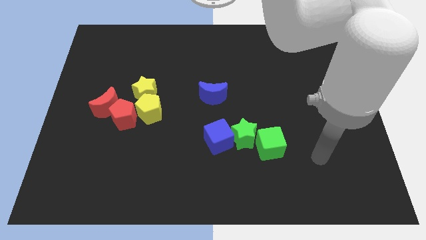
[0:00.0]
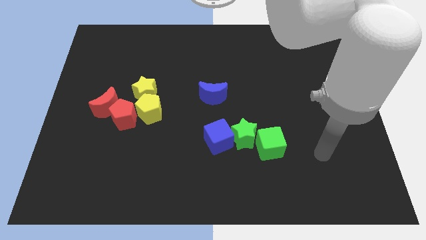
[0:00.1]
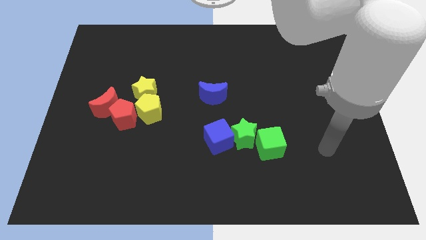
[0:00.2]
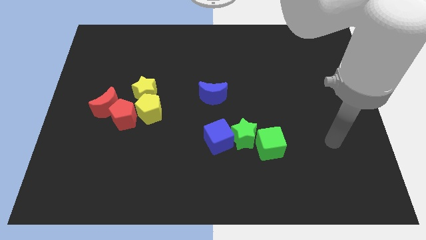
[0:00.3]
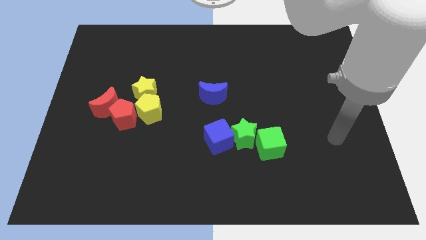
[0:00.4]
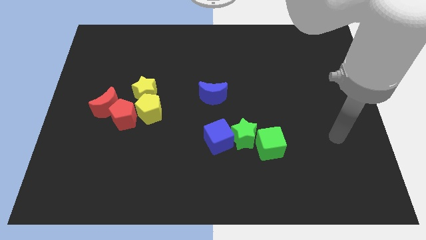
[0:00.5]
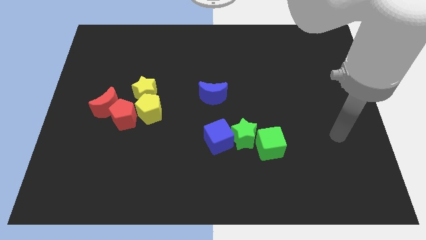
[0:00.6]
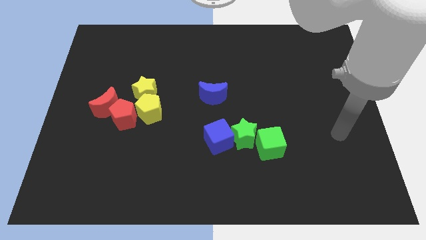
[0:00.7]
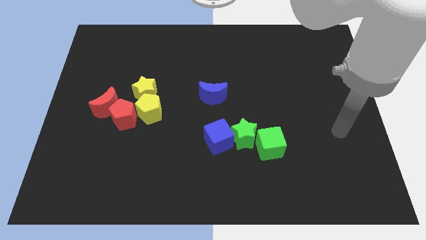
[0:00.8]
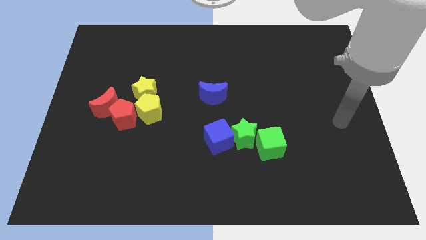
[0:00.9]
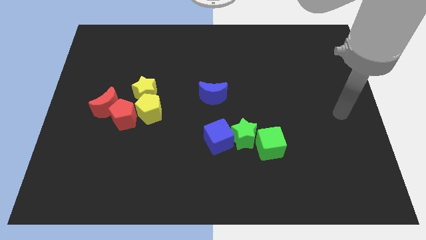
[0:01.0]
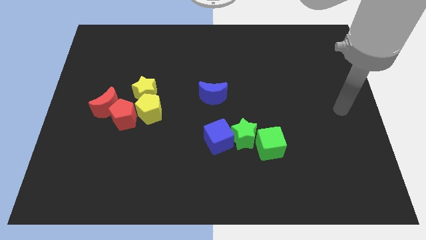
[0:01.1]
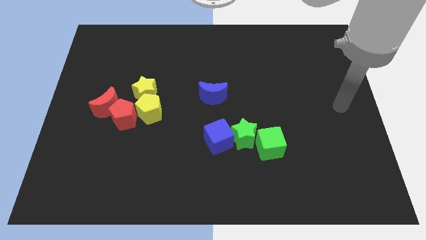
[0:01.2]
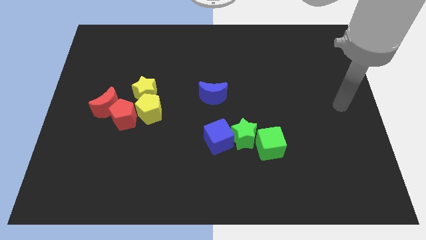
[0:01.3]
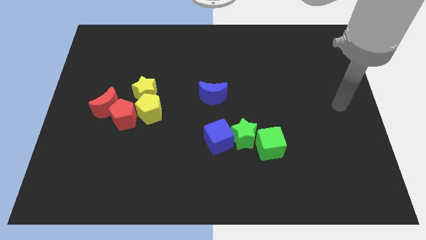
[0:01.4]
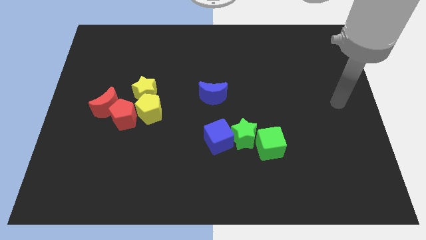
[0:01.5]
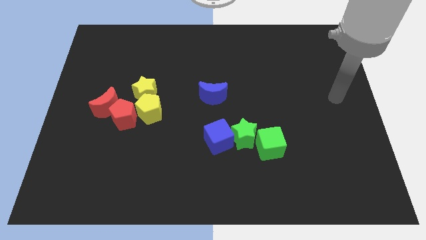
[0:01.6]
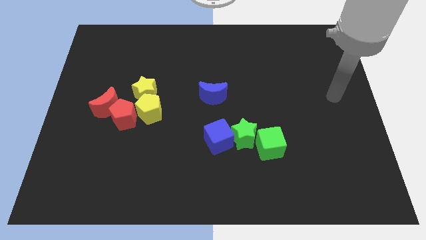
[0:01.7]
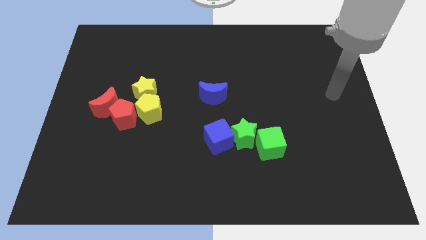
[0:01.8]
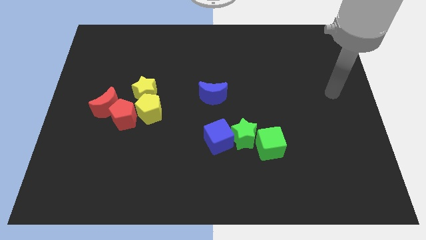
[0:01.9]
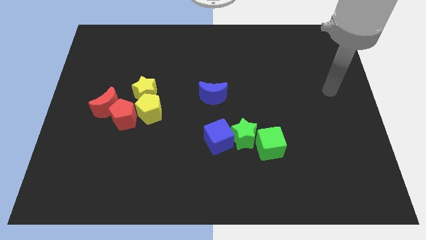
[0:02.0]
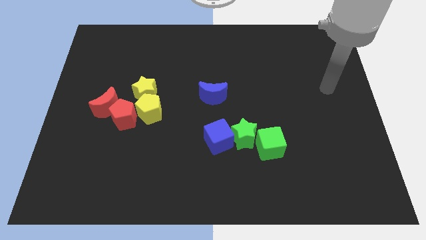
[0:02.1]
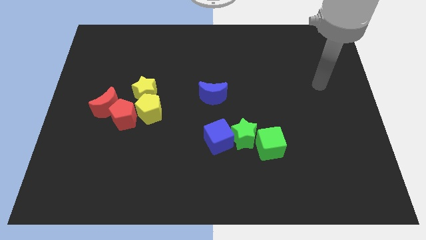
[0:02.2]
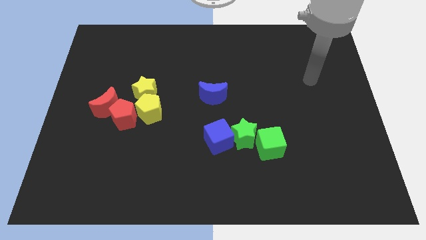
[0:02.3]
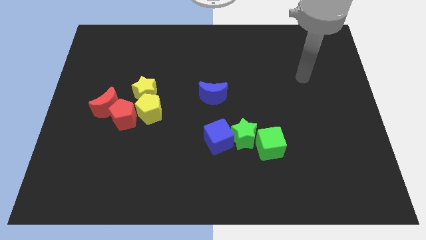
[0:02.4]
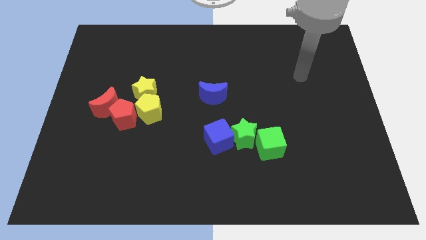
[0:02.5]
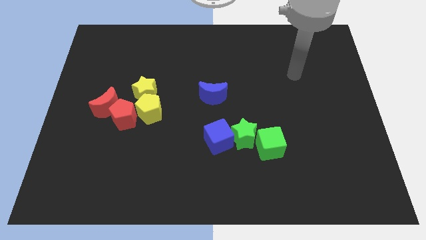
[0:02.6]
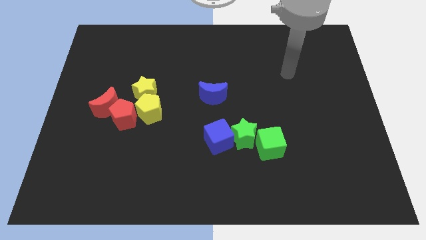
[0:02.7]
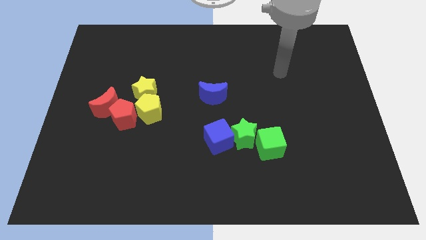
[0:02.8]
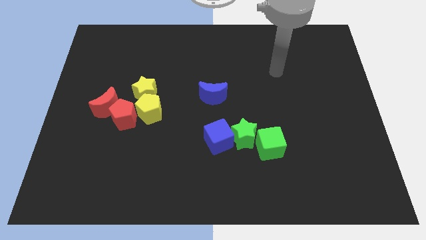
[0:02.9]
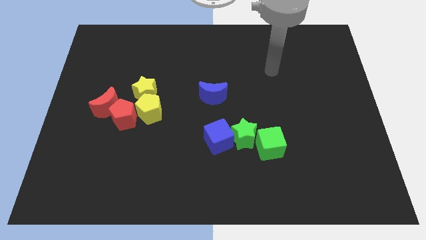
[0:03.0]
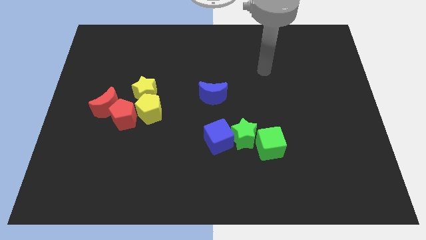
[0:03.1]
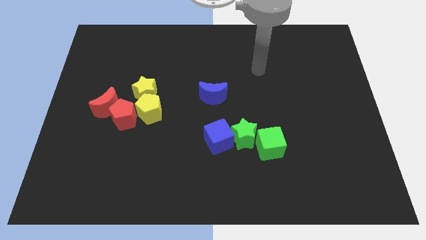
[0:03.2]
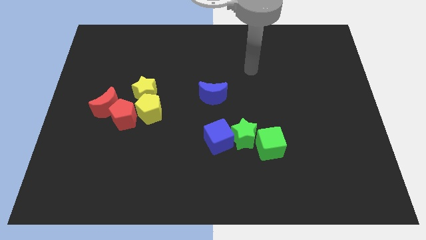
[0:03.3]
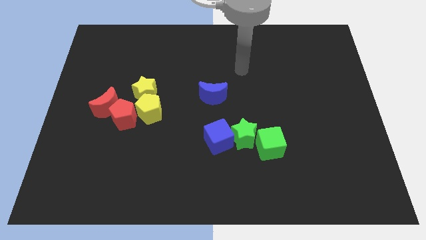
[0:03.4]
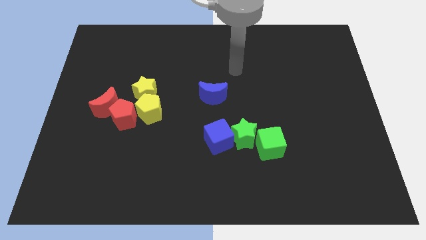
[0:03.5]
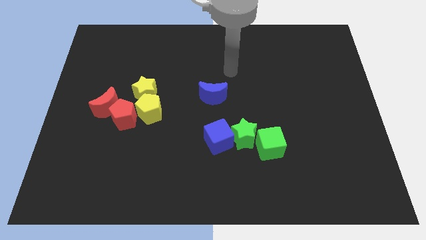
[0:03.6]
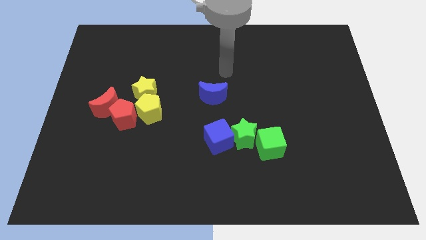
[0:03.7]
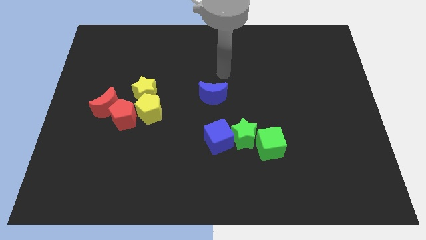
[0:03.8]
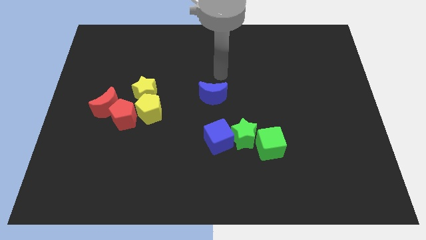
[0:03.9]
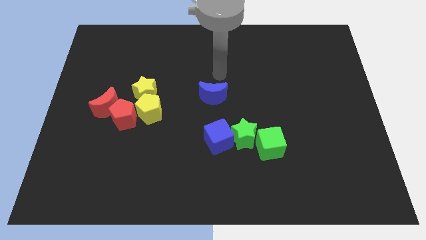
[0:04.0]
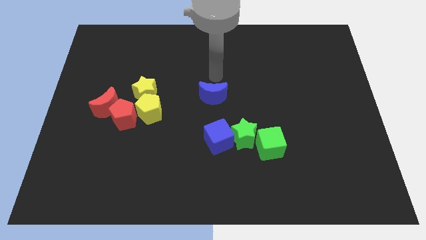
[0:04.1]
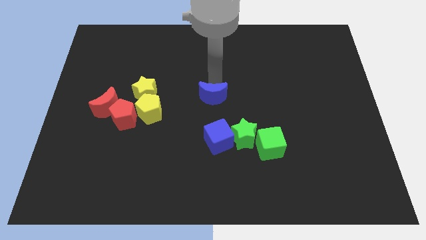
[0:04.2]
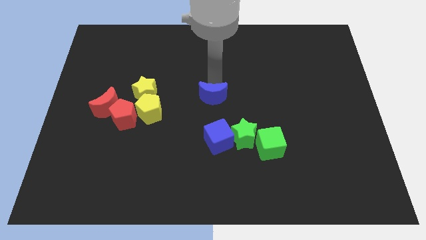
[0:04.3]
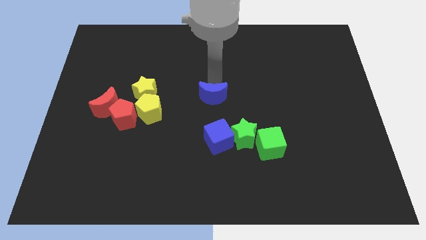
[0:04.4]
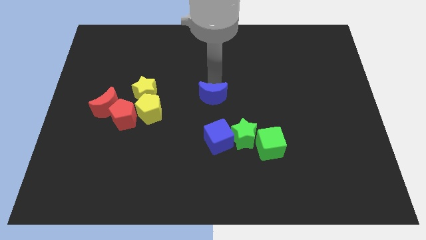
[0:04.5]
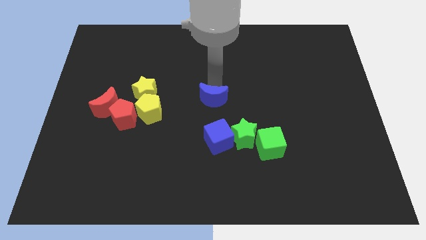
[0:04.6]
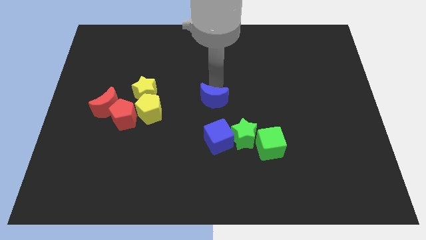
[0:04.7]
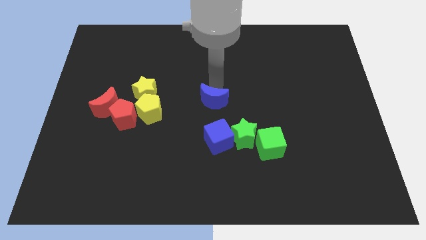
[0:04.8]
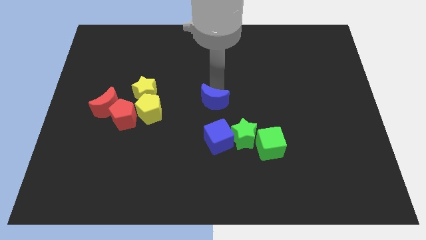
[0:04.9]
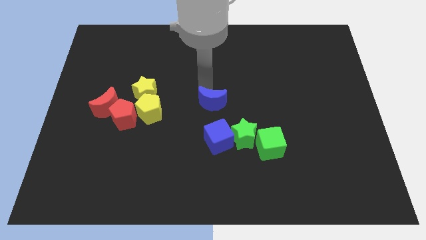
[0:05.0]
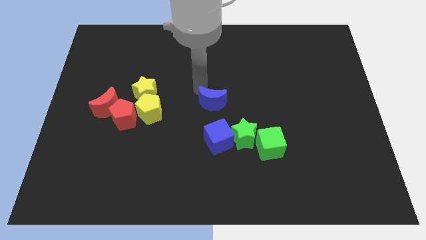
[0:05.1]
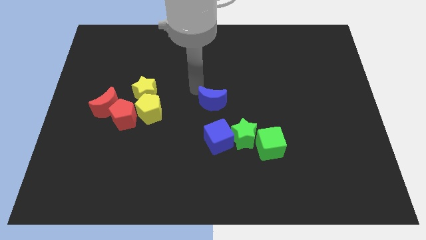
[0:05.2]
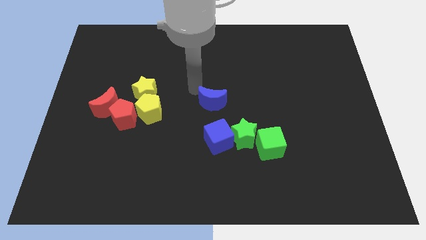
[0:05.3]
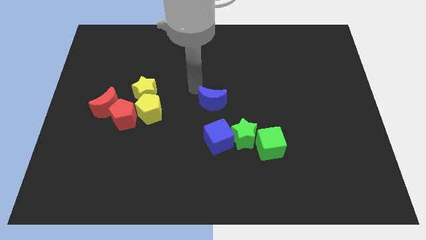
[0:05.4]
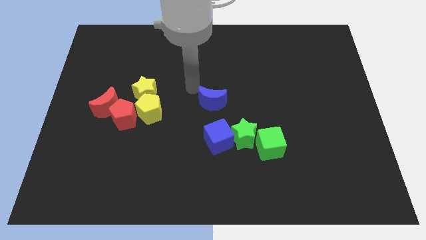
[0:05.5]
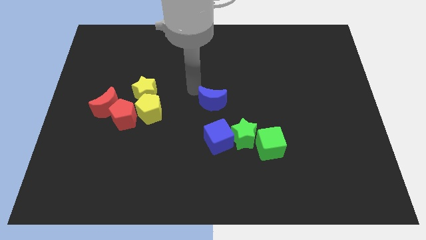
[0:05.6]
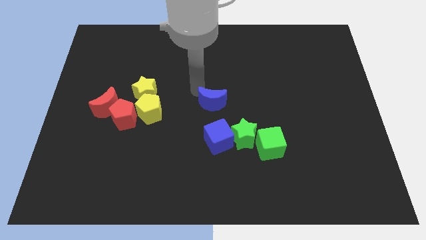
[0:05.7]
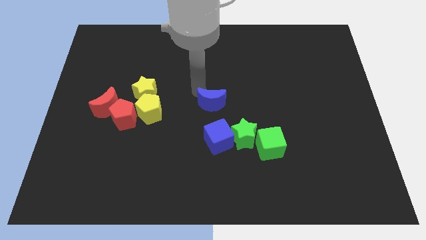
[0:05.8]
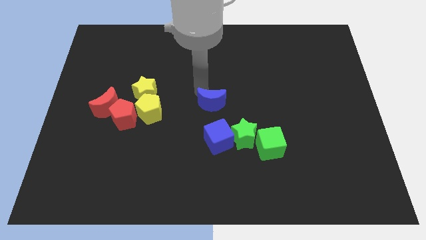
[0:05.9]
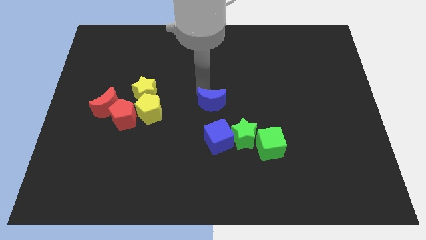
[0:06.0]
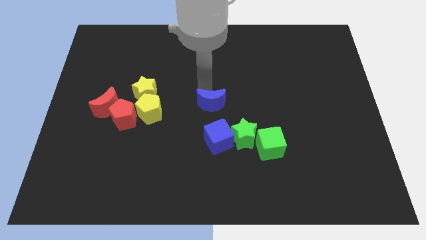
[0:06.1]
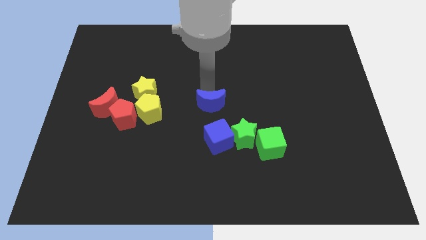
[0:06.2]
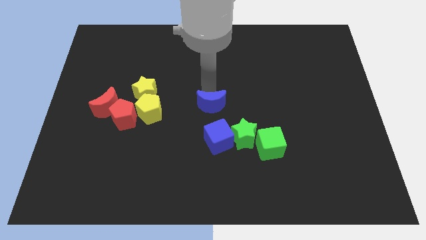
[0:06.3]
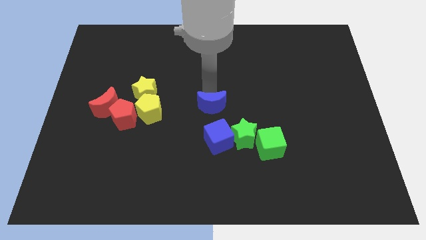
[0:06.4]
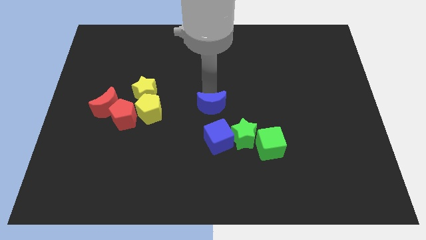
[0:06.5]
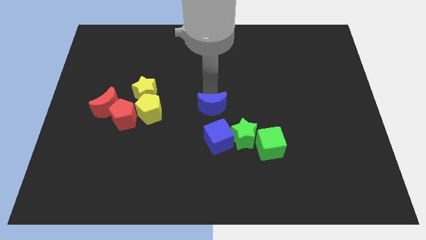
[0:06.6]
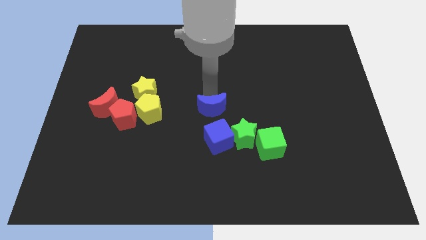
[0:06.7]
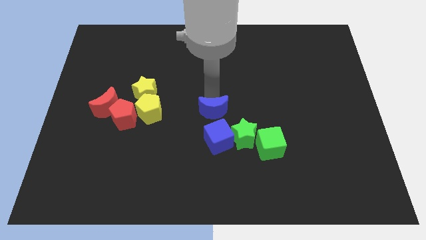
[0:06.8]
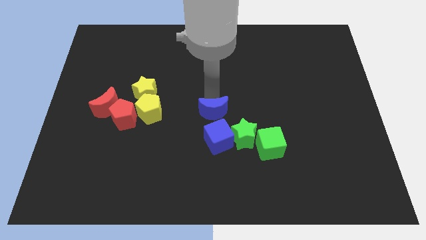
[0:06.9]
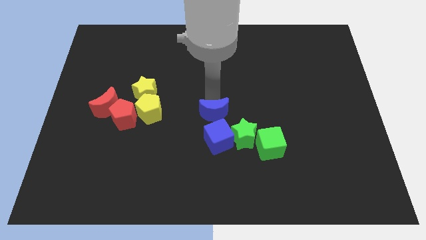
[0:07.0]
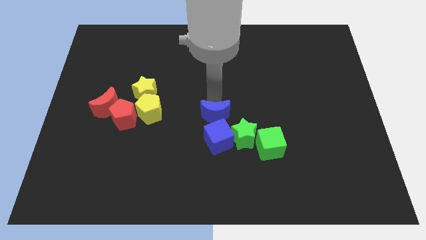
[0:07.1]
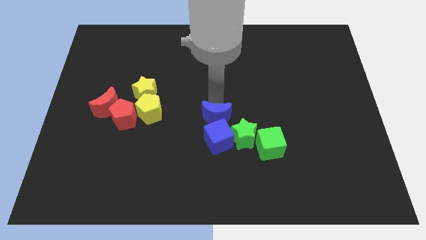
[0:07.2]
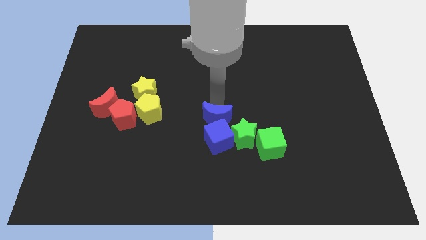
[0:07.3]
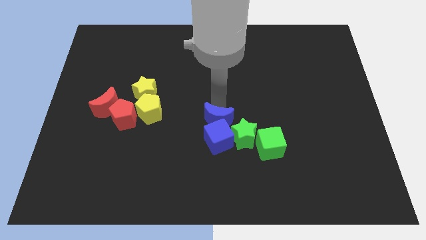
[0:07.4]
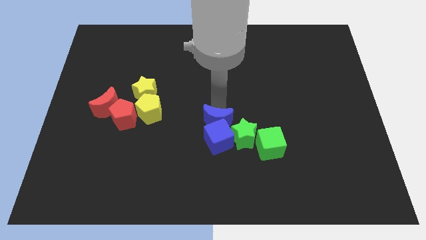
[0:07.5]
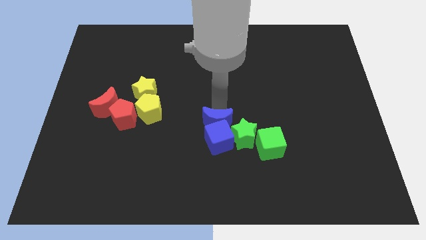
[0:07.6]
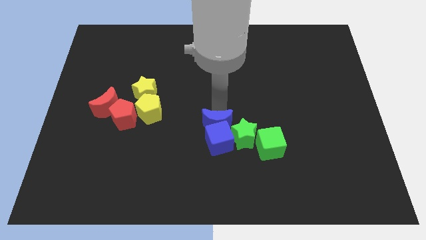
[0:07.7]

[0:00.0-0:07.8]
push the blue crescent to the group of blocks

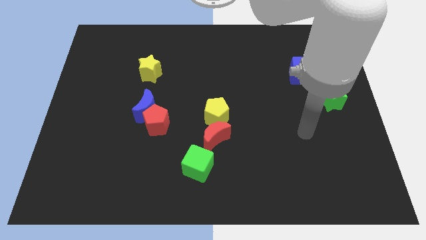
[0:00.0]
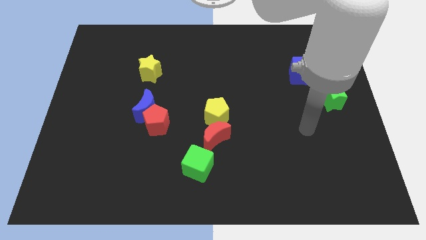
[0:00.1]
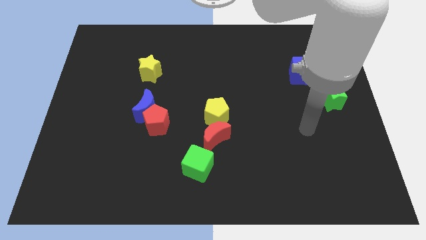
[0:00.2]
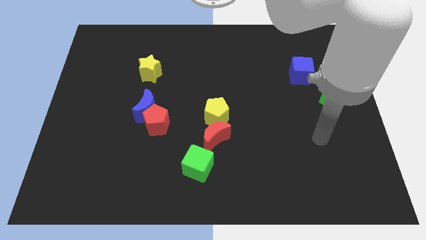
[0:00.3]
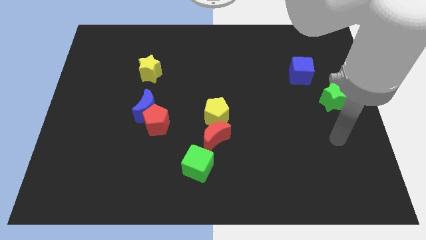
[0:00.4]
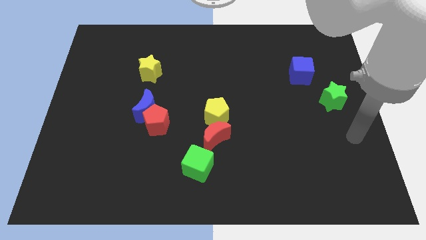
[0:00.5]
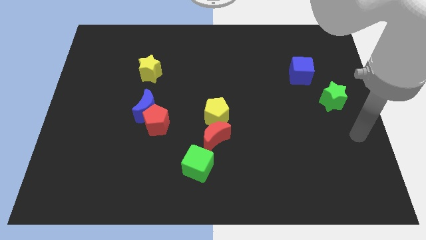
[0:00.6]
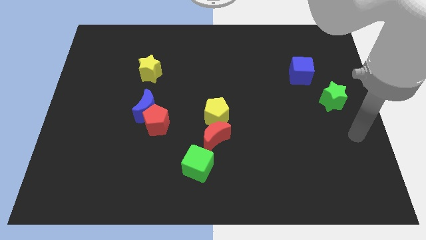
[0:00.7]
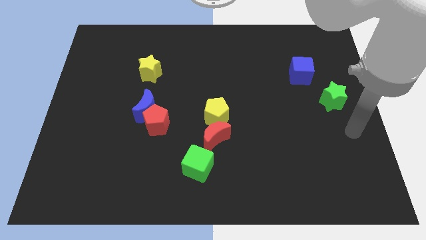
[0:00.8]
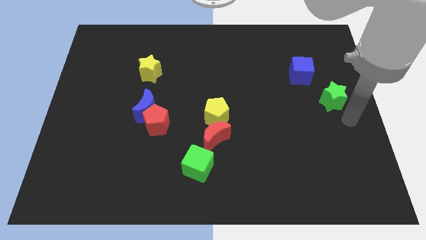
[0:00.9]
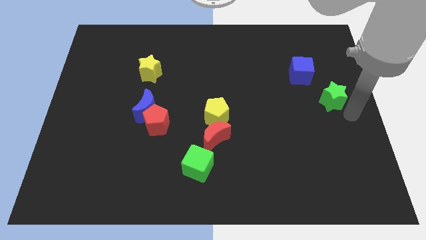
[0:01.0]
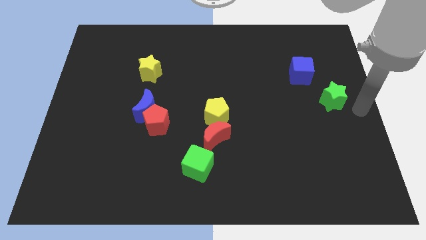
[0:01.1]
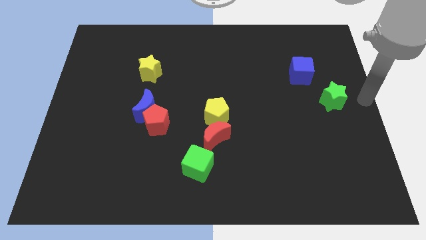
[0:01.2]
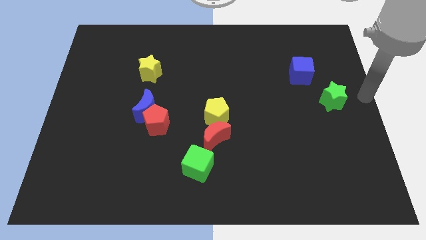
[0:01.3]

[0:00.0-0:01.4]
move your hand at the center right of the board
